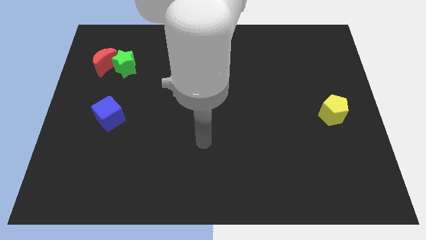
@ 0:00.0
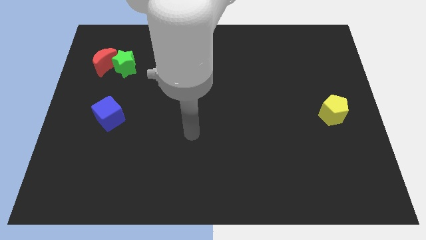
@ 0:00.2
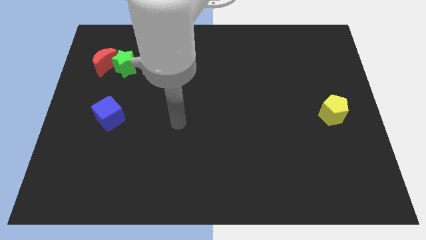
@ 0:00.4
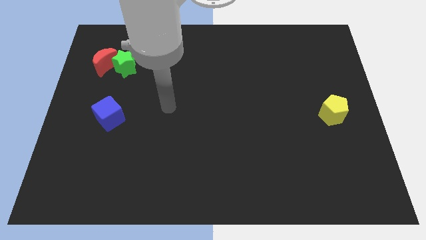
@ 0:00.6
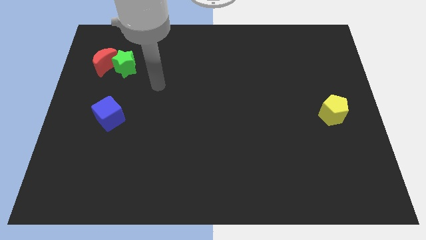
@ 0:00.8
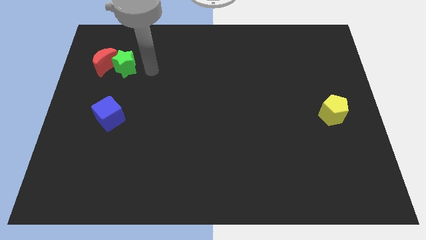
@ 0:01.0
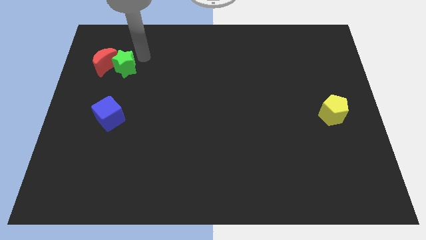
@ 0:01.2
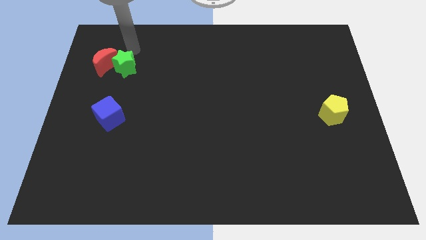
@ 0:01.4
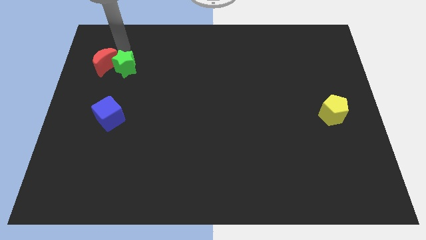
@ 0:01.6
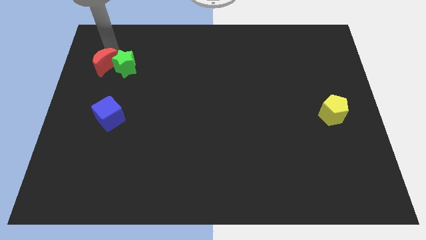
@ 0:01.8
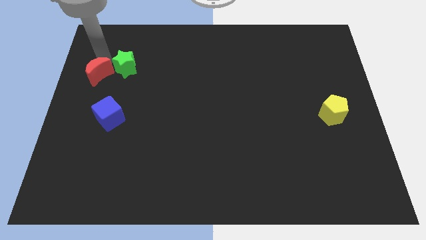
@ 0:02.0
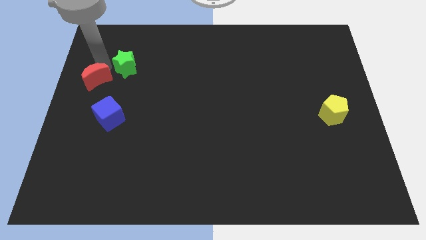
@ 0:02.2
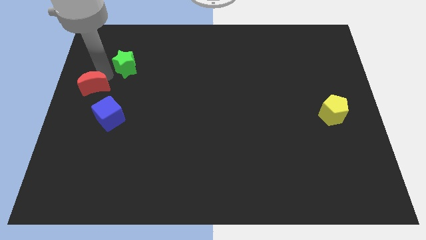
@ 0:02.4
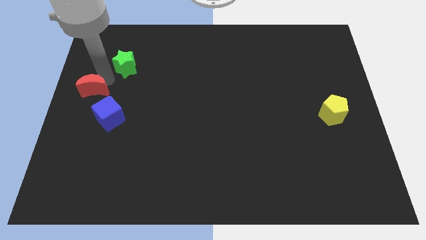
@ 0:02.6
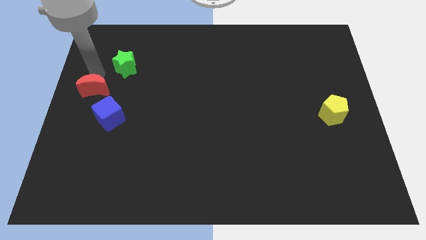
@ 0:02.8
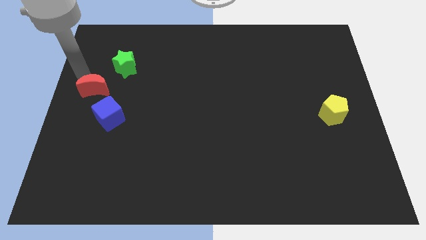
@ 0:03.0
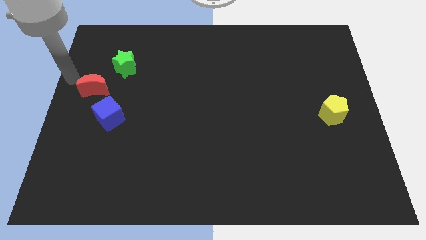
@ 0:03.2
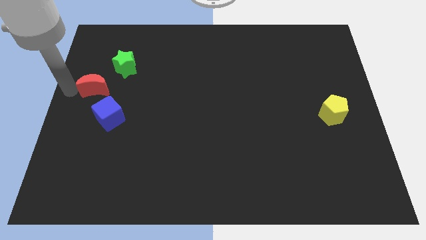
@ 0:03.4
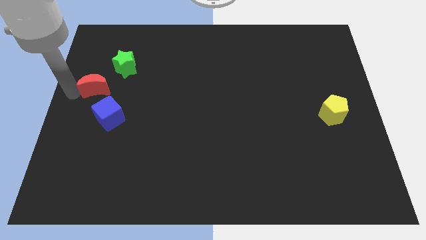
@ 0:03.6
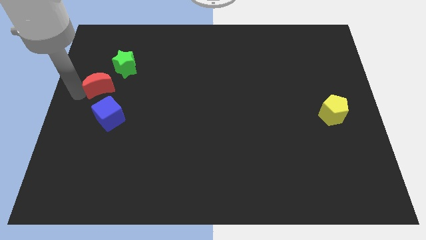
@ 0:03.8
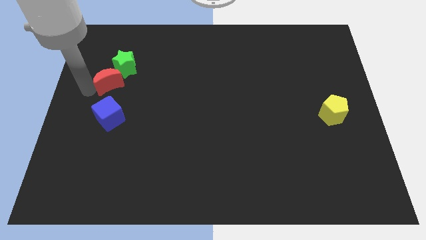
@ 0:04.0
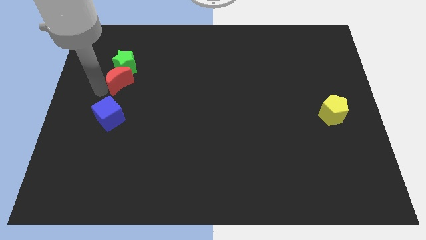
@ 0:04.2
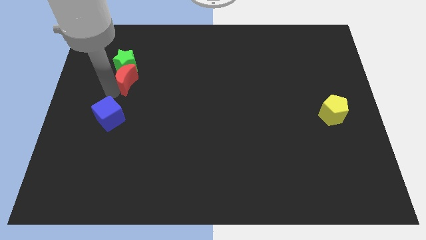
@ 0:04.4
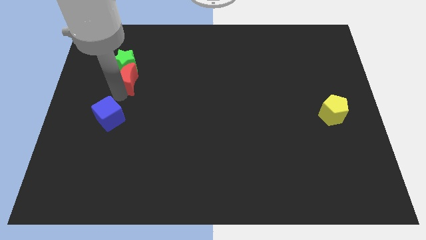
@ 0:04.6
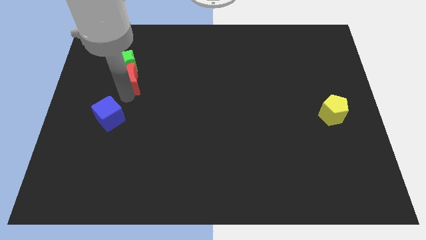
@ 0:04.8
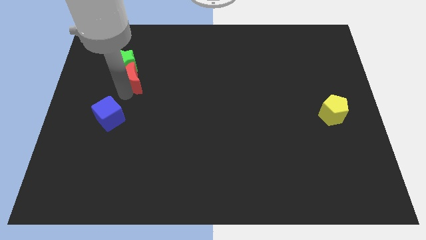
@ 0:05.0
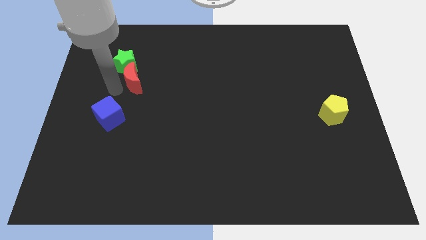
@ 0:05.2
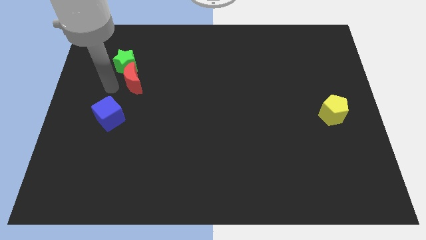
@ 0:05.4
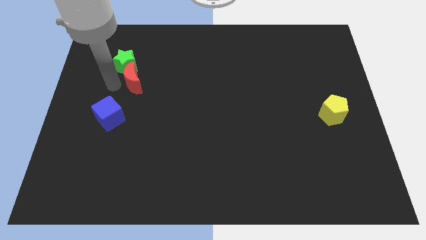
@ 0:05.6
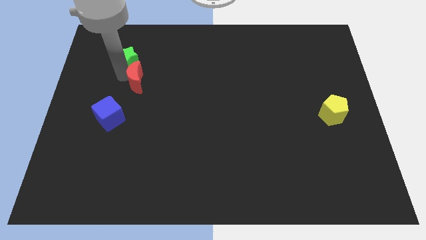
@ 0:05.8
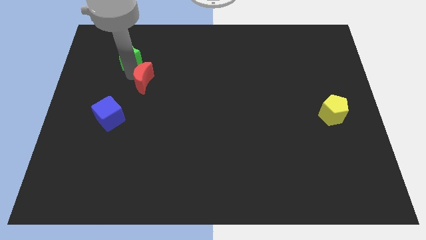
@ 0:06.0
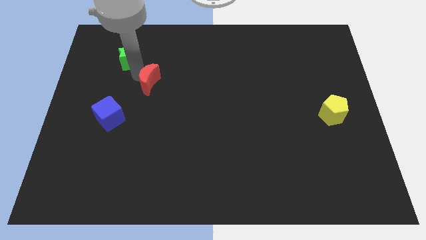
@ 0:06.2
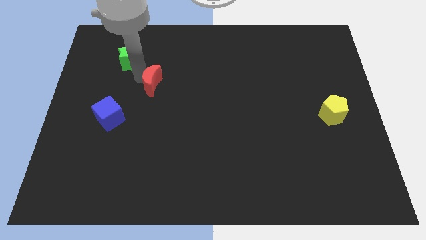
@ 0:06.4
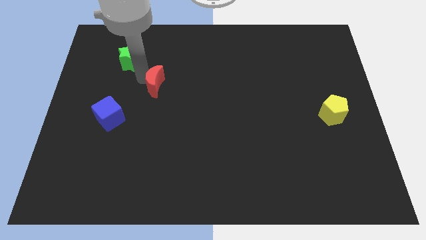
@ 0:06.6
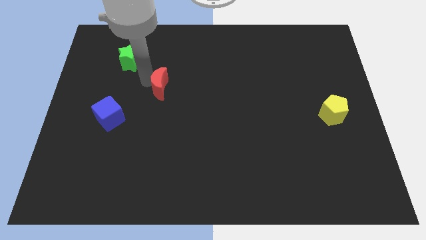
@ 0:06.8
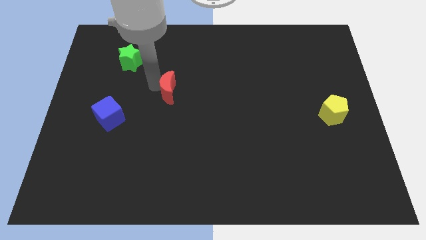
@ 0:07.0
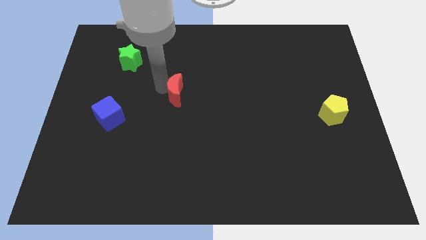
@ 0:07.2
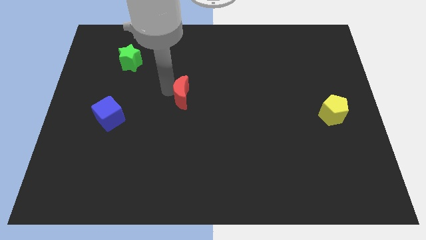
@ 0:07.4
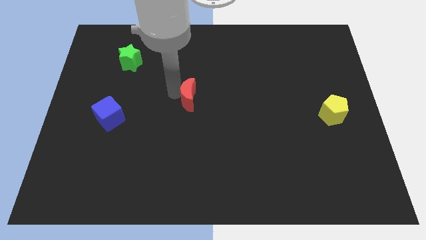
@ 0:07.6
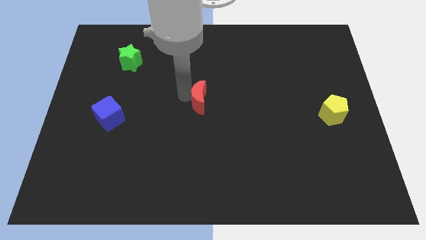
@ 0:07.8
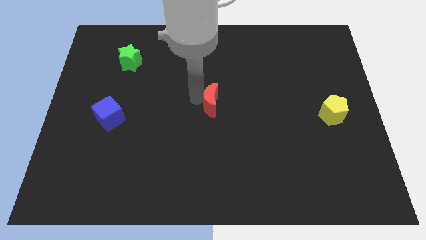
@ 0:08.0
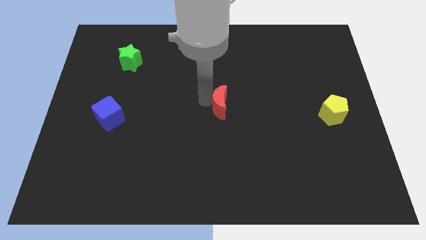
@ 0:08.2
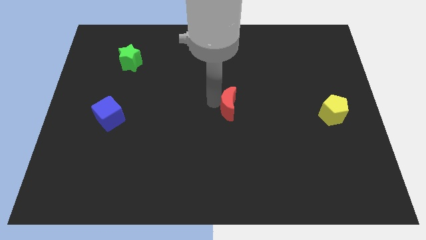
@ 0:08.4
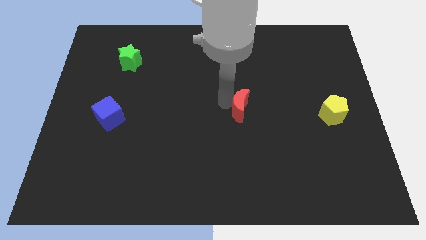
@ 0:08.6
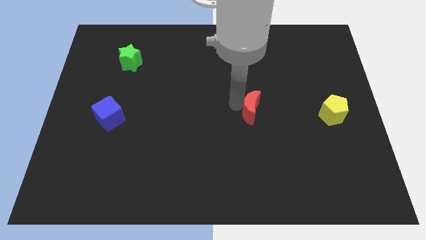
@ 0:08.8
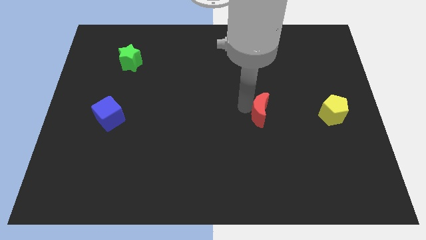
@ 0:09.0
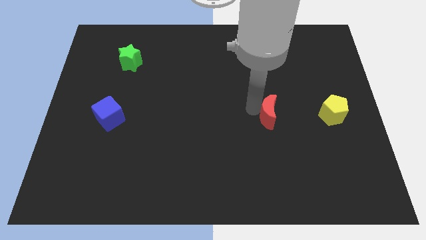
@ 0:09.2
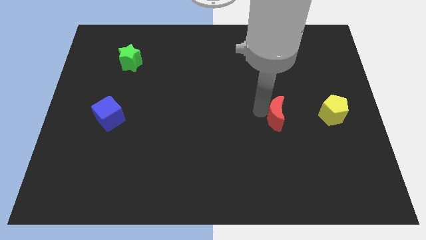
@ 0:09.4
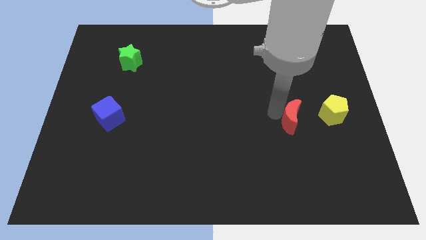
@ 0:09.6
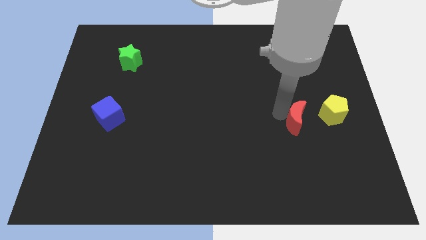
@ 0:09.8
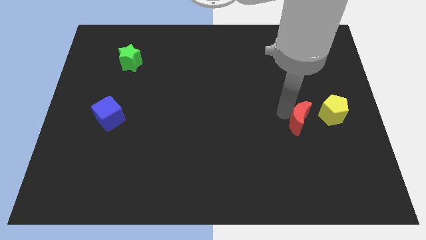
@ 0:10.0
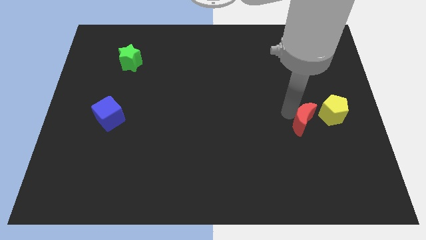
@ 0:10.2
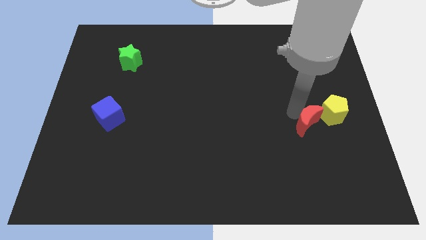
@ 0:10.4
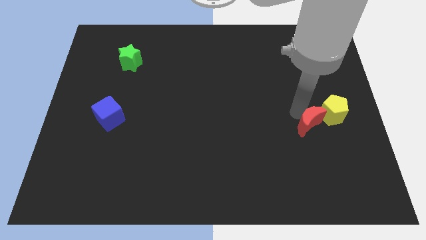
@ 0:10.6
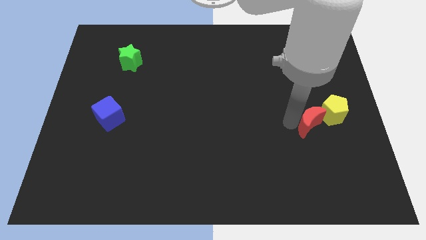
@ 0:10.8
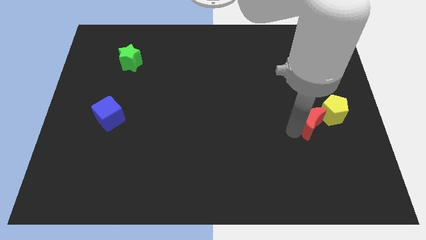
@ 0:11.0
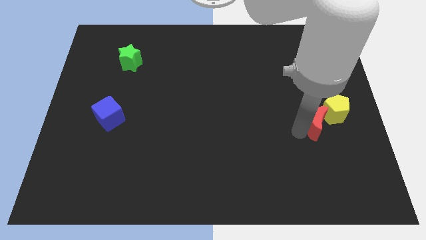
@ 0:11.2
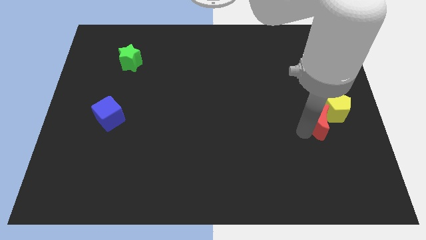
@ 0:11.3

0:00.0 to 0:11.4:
move the red block close to the pentagon

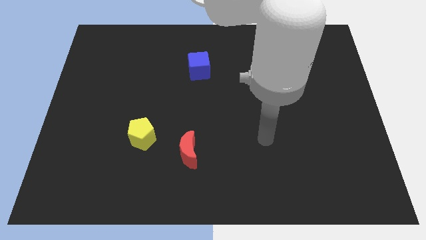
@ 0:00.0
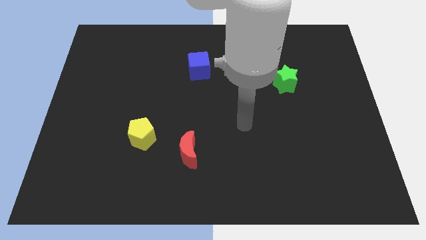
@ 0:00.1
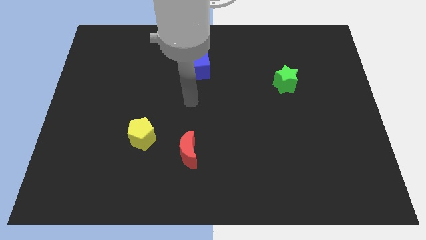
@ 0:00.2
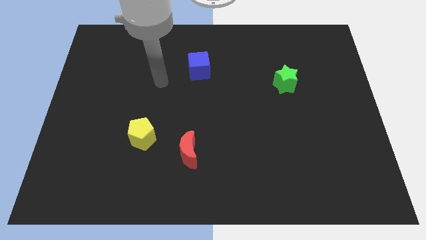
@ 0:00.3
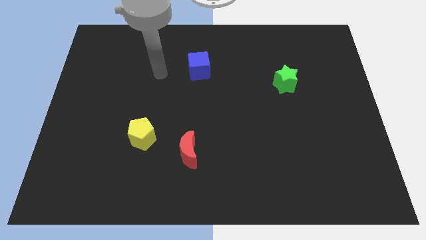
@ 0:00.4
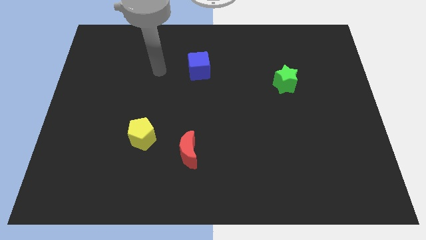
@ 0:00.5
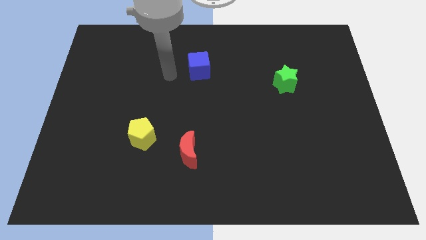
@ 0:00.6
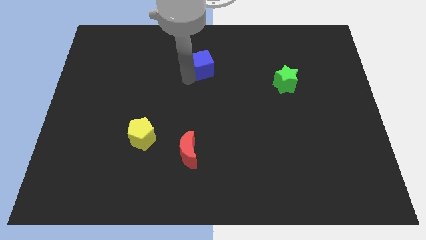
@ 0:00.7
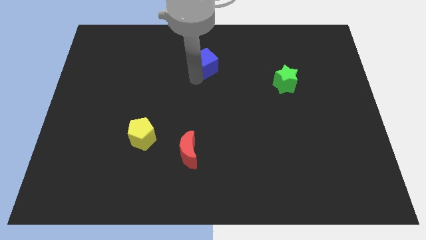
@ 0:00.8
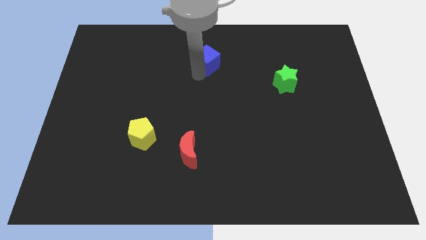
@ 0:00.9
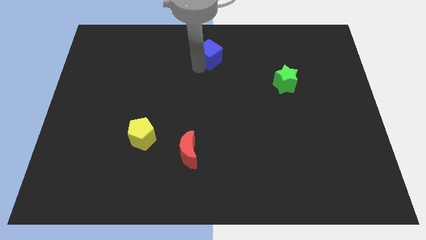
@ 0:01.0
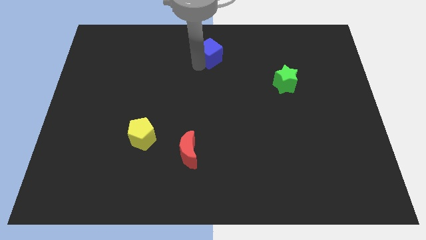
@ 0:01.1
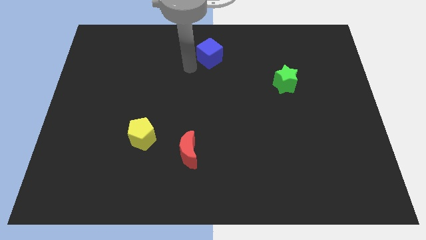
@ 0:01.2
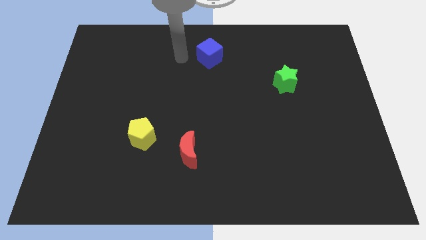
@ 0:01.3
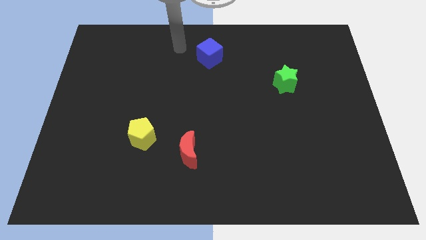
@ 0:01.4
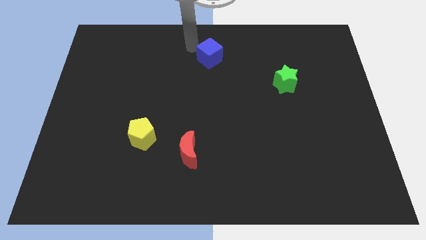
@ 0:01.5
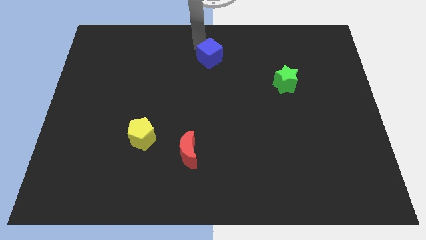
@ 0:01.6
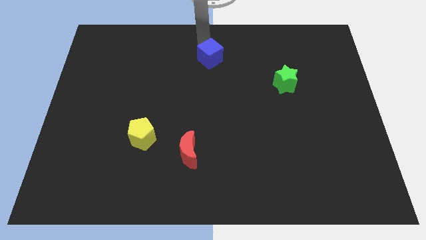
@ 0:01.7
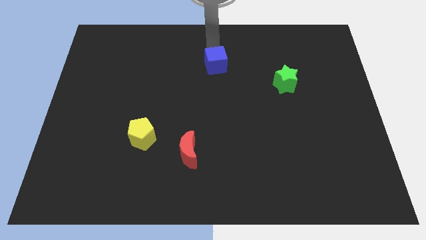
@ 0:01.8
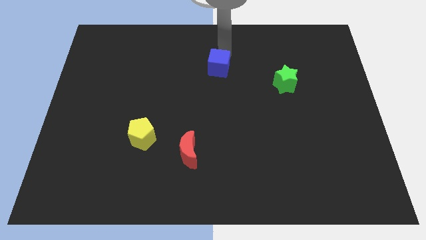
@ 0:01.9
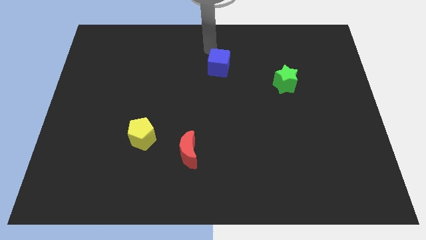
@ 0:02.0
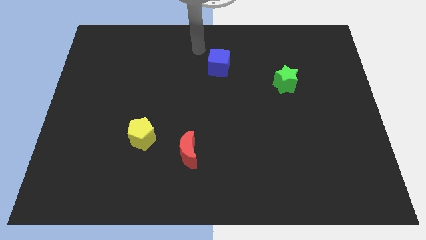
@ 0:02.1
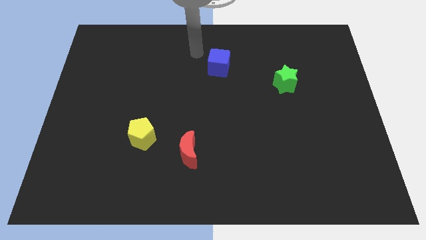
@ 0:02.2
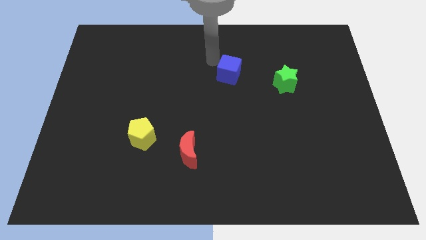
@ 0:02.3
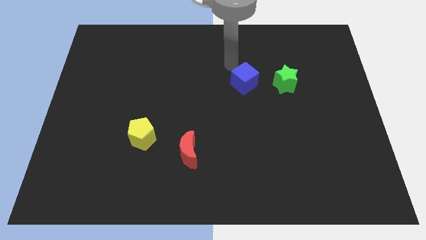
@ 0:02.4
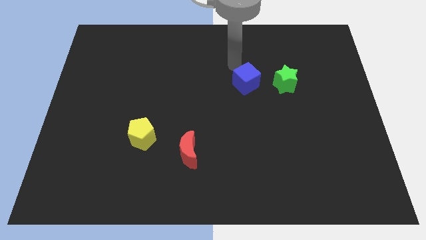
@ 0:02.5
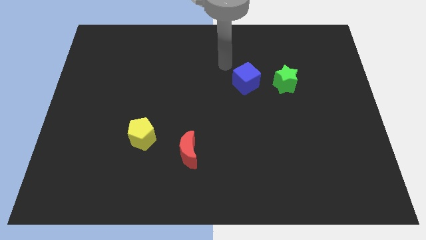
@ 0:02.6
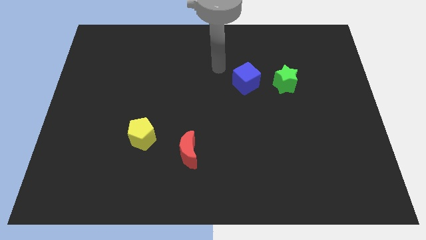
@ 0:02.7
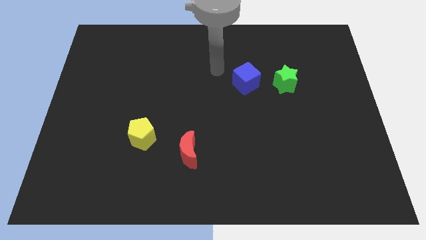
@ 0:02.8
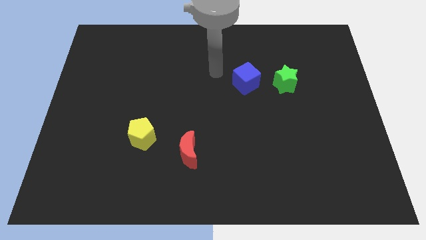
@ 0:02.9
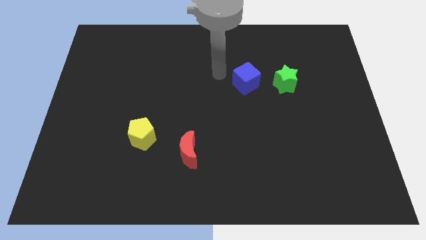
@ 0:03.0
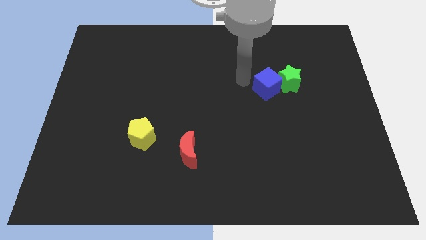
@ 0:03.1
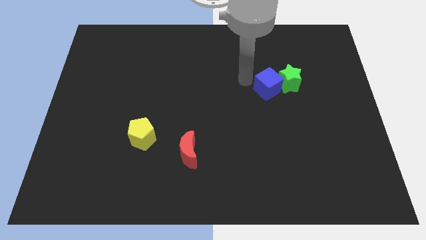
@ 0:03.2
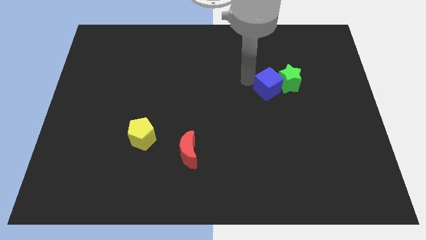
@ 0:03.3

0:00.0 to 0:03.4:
push the blue cube to the star
